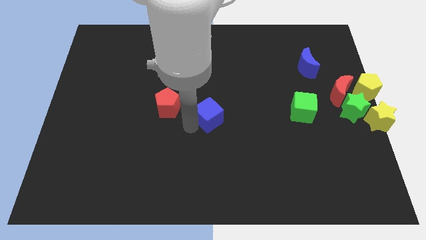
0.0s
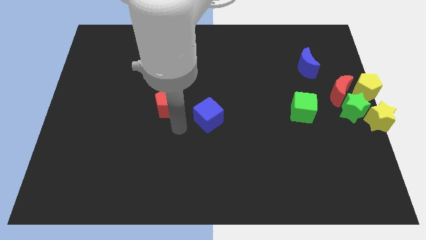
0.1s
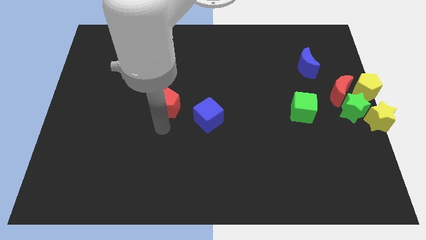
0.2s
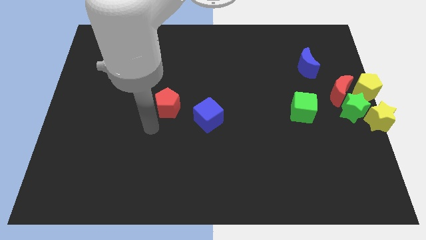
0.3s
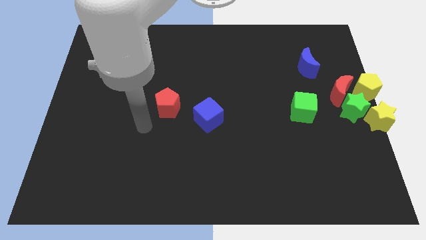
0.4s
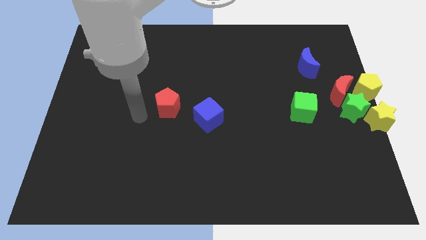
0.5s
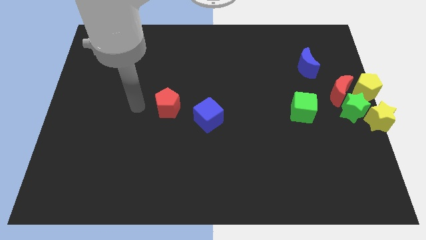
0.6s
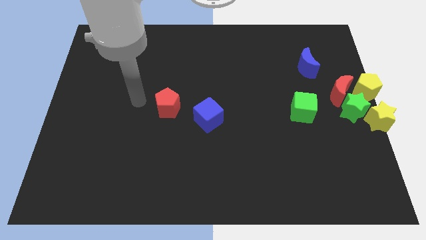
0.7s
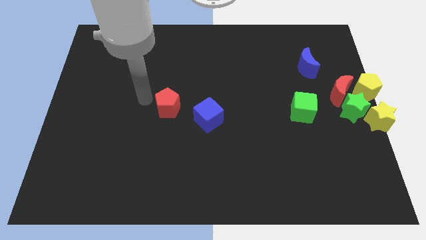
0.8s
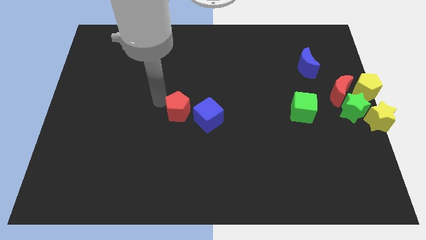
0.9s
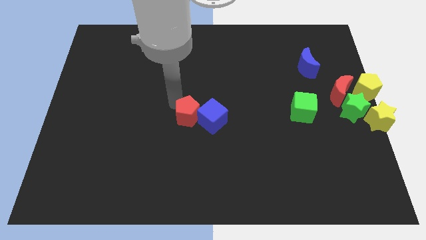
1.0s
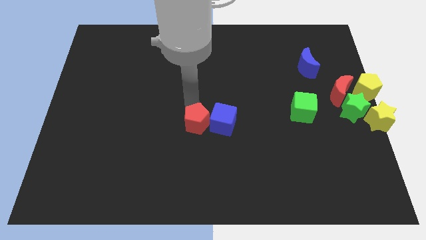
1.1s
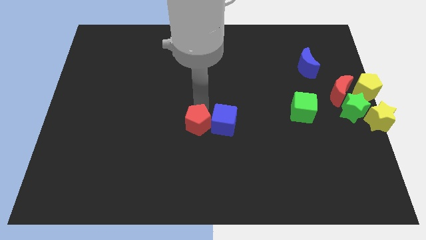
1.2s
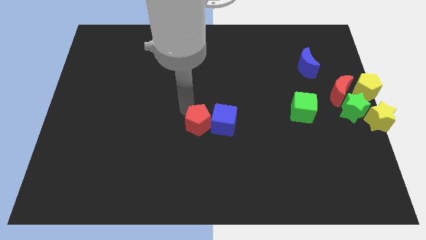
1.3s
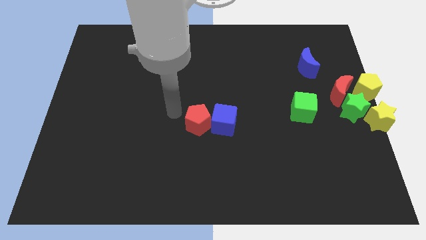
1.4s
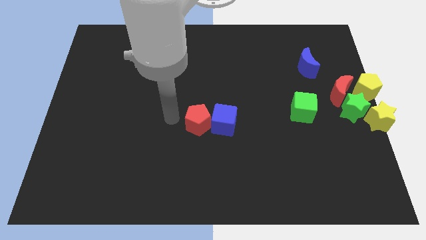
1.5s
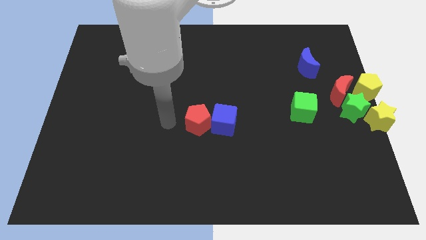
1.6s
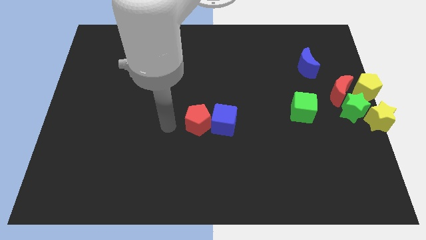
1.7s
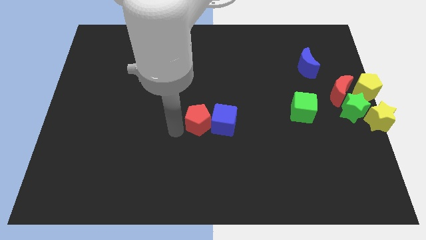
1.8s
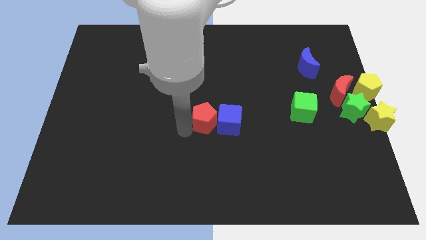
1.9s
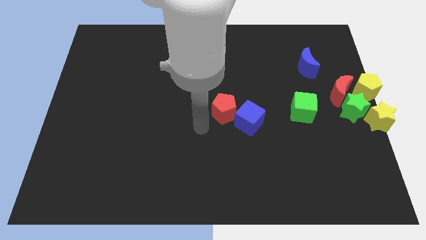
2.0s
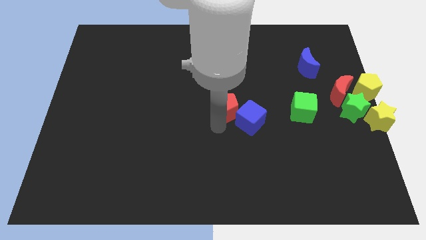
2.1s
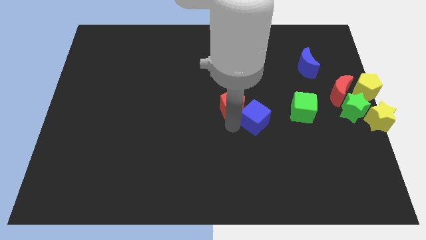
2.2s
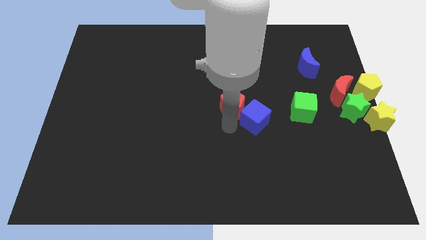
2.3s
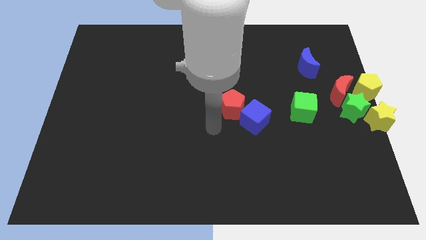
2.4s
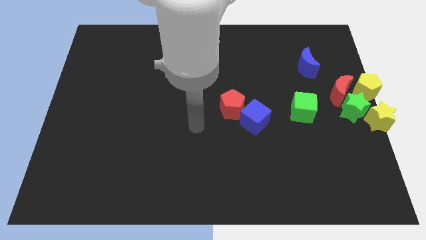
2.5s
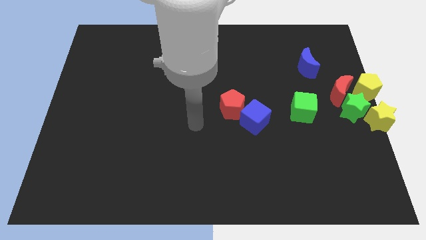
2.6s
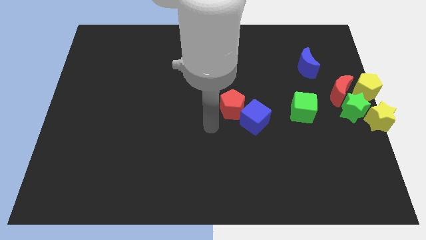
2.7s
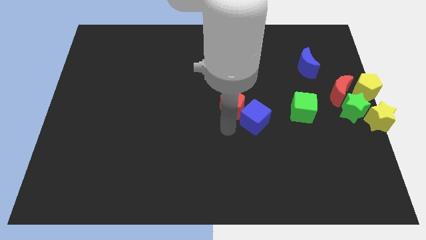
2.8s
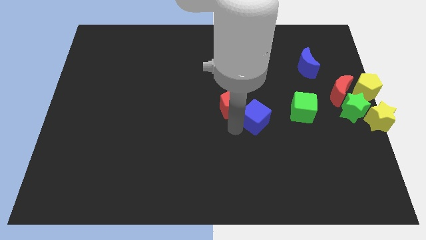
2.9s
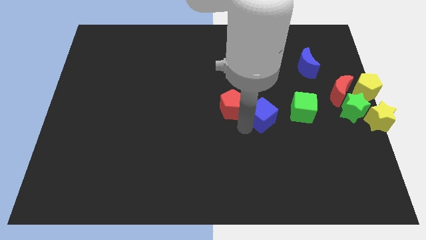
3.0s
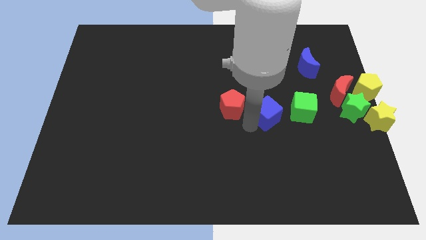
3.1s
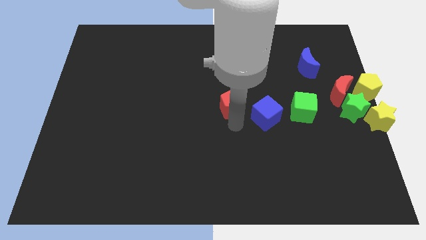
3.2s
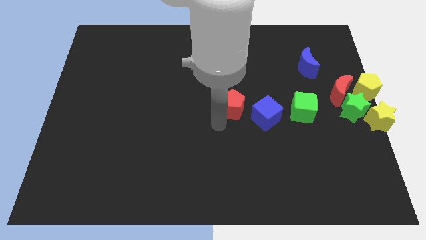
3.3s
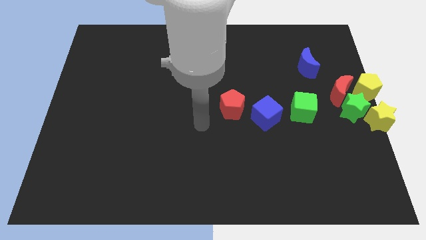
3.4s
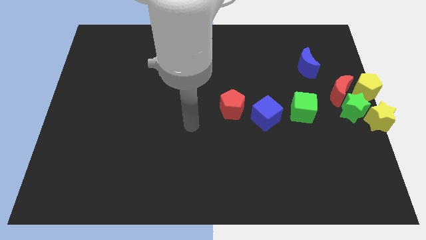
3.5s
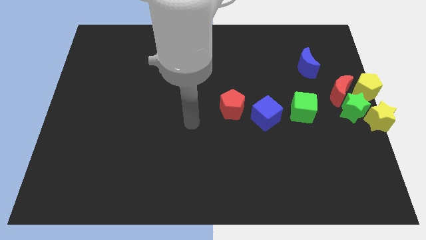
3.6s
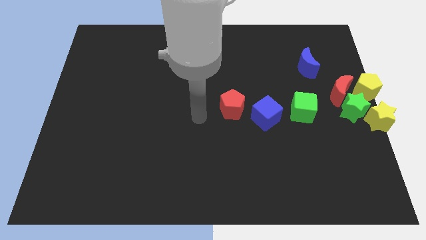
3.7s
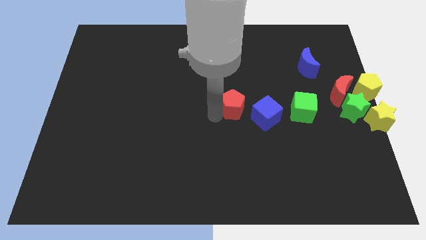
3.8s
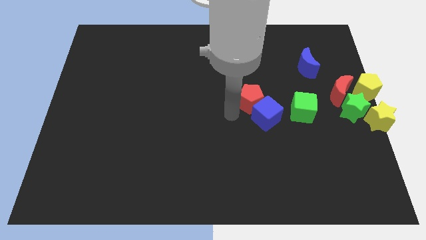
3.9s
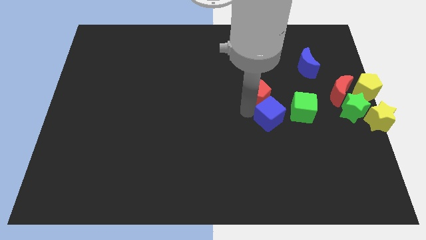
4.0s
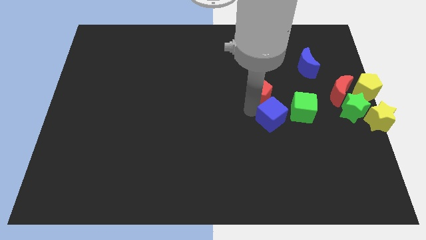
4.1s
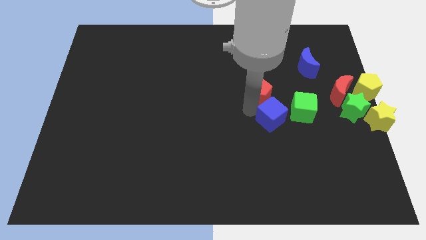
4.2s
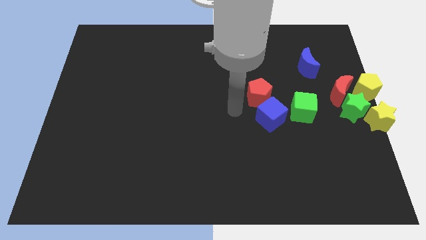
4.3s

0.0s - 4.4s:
push the red pentagon into the blue cube

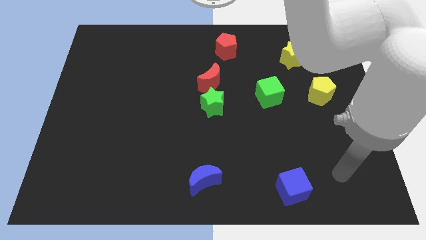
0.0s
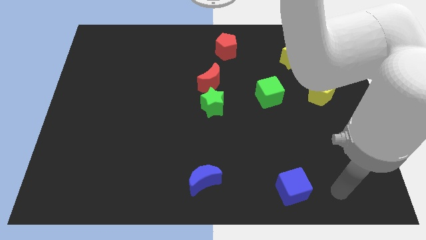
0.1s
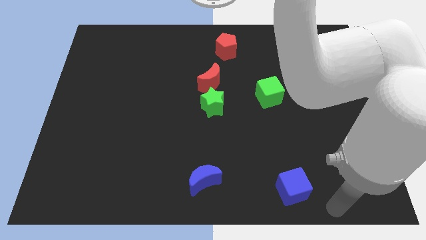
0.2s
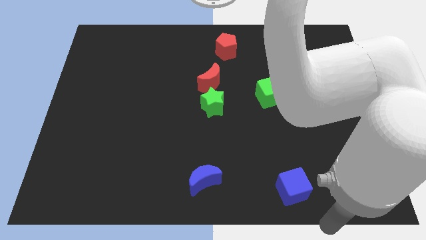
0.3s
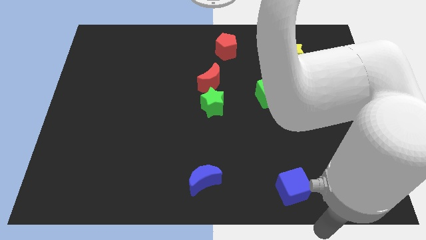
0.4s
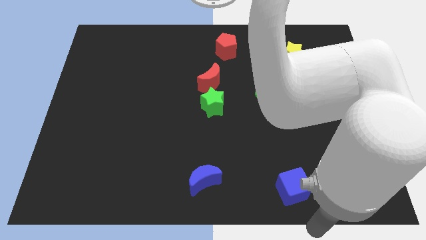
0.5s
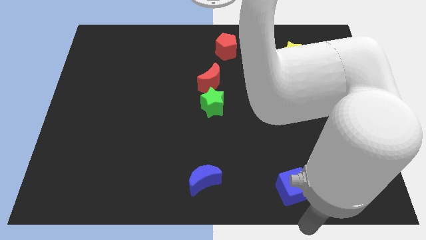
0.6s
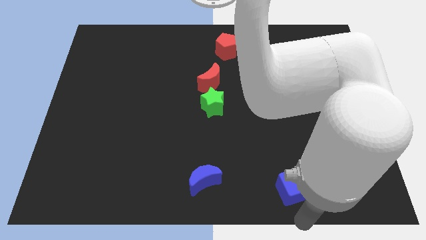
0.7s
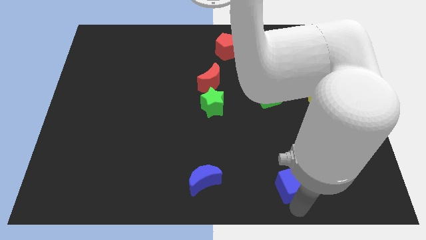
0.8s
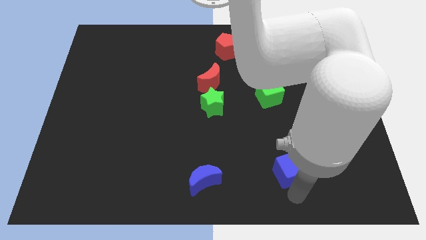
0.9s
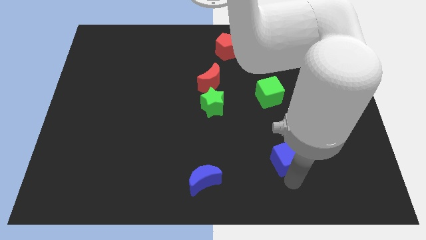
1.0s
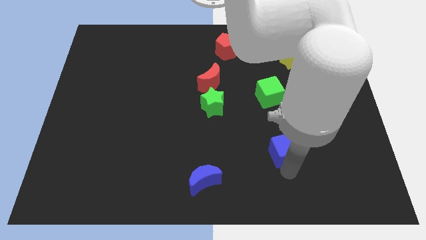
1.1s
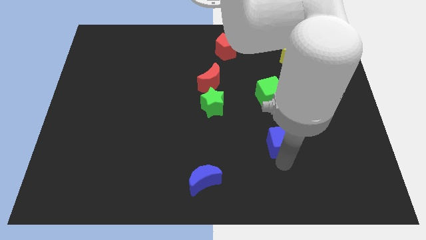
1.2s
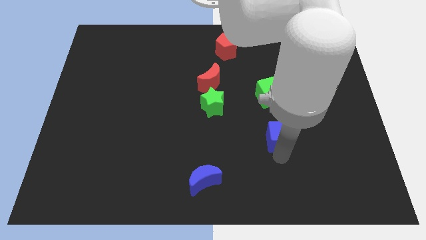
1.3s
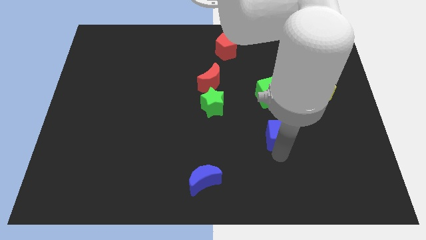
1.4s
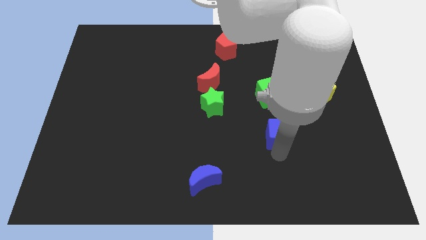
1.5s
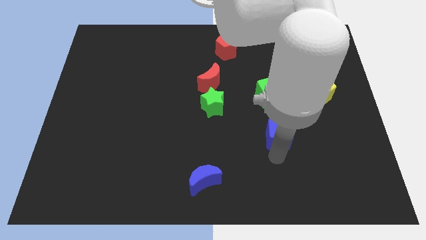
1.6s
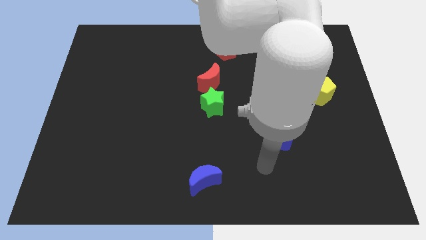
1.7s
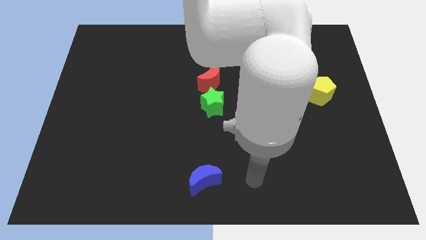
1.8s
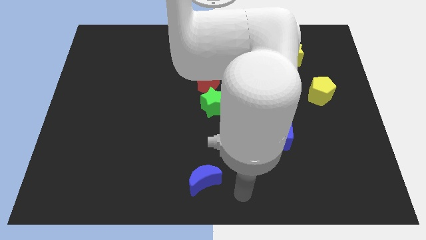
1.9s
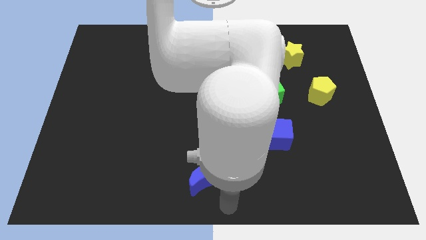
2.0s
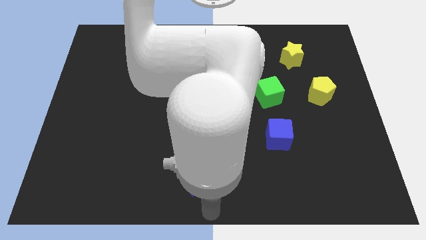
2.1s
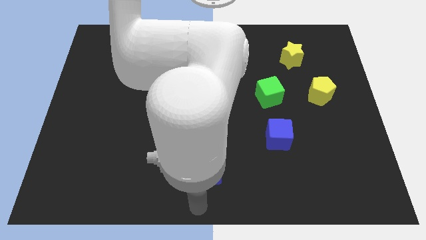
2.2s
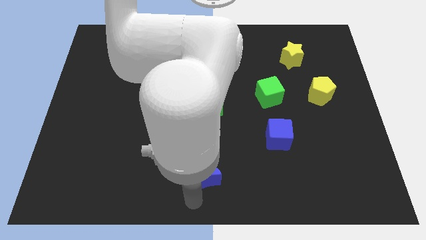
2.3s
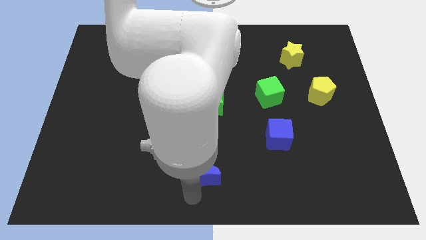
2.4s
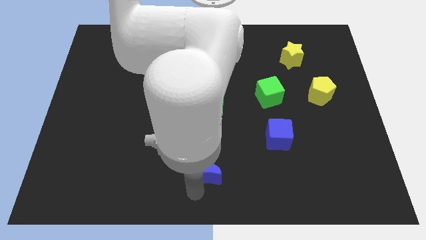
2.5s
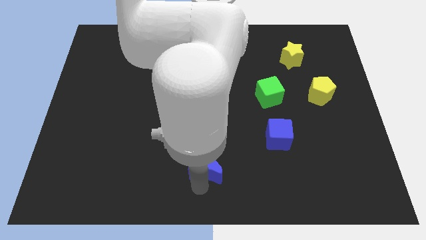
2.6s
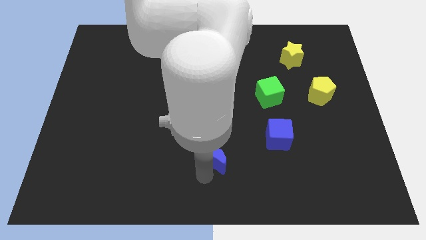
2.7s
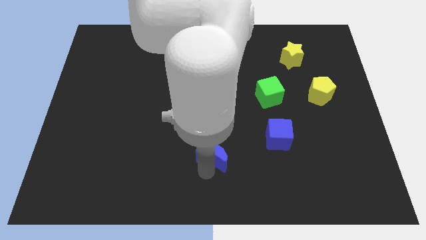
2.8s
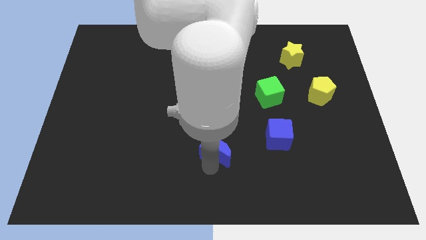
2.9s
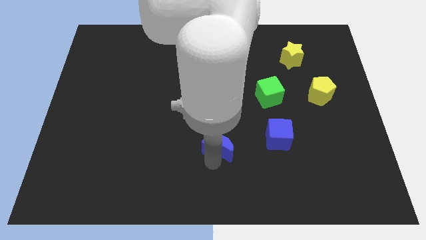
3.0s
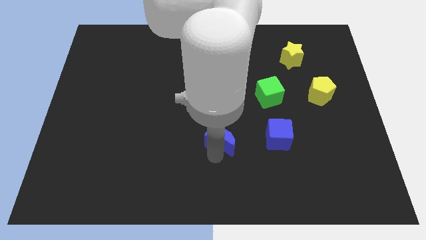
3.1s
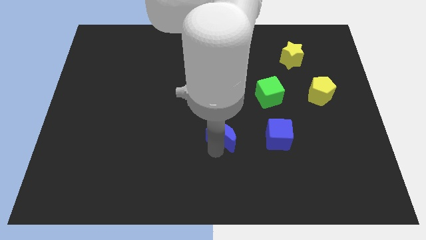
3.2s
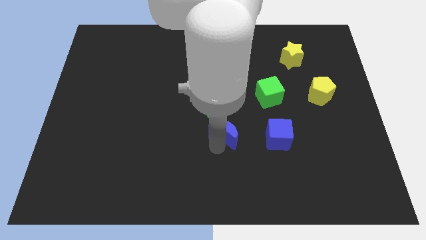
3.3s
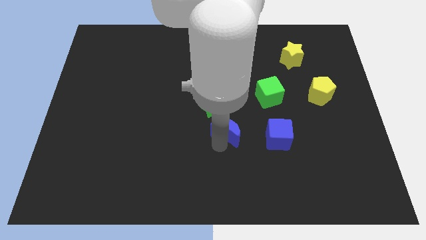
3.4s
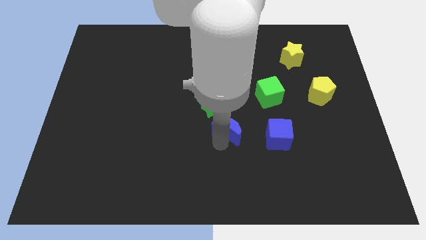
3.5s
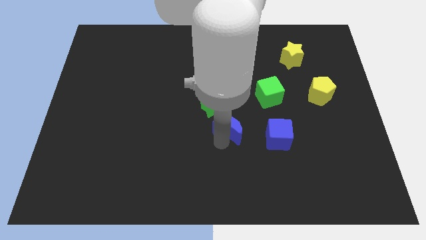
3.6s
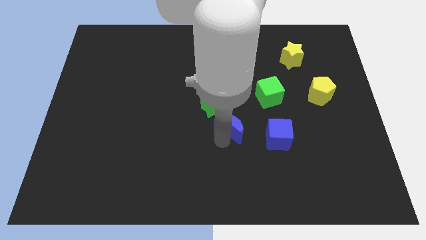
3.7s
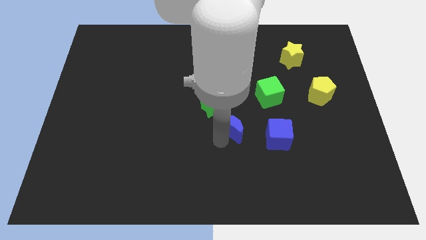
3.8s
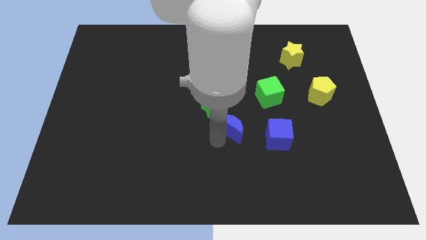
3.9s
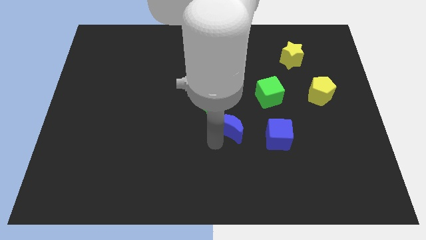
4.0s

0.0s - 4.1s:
slide blue blocks slightly up to form a horizontal line

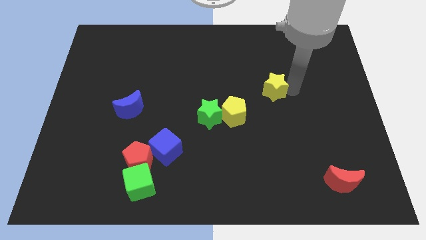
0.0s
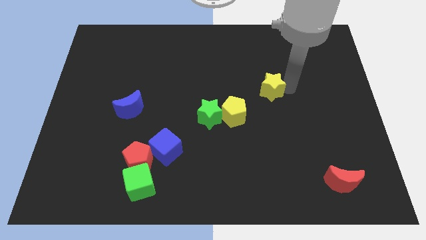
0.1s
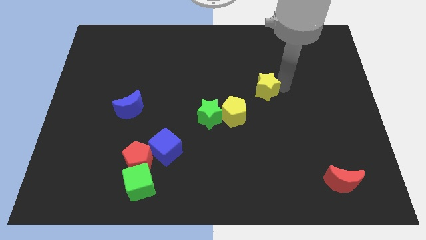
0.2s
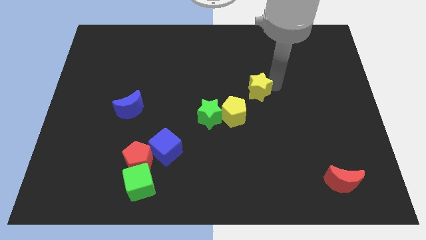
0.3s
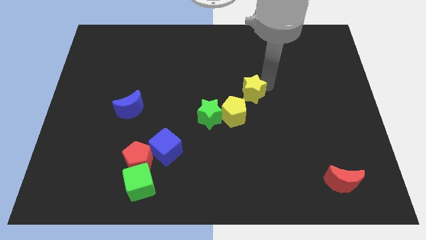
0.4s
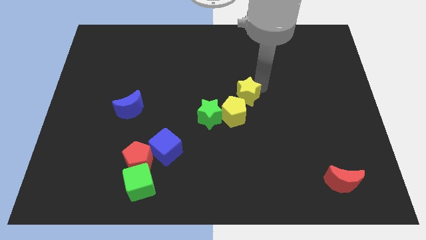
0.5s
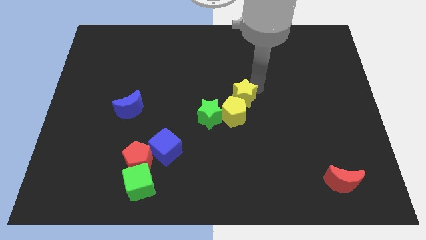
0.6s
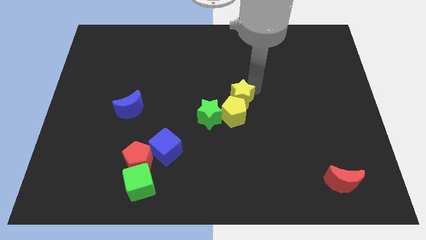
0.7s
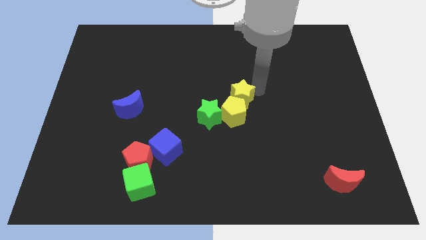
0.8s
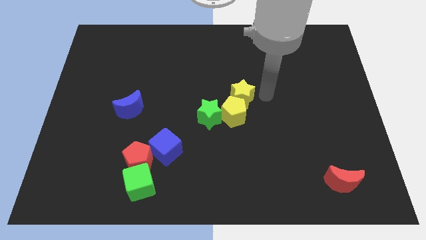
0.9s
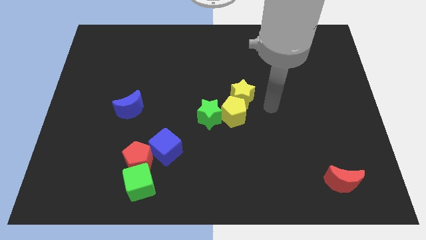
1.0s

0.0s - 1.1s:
place the yellow star on top right of the yellow pentagon
